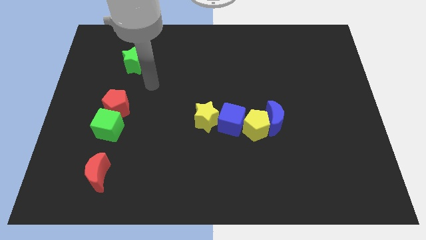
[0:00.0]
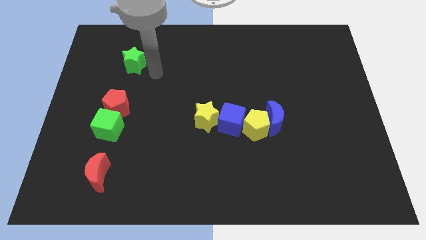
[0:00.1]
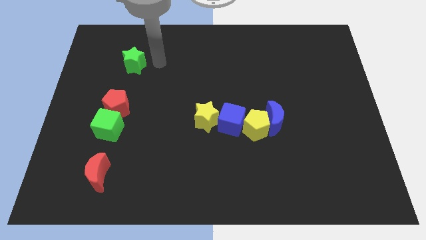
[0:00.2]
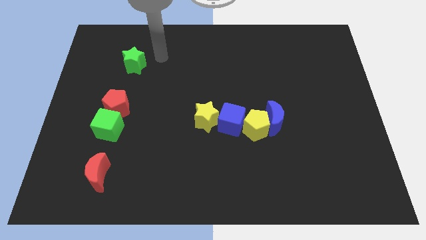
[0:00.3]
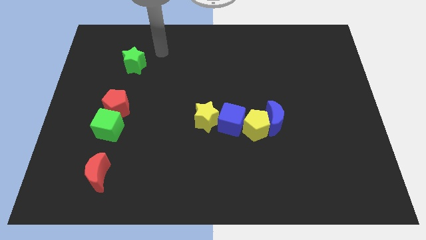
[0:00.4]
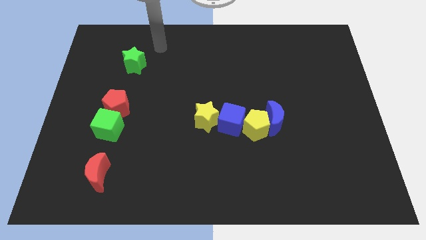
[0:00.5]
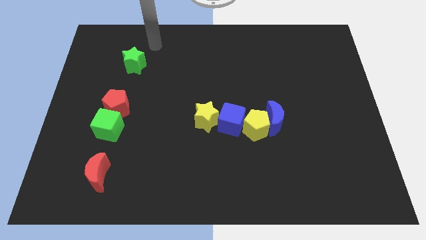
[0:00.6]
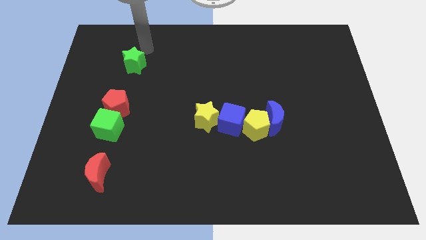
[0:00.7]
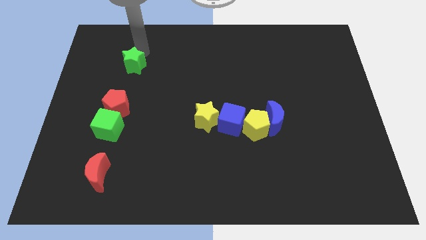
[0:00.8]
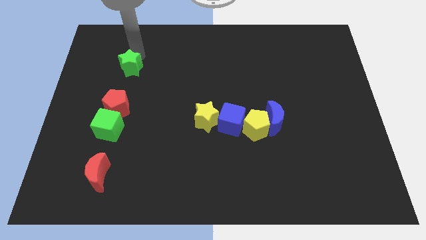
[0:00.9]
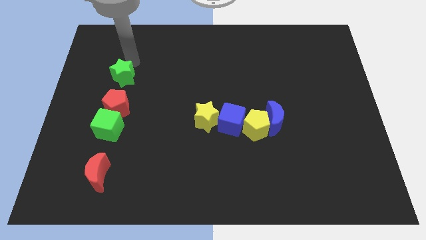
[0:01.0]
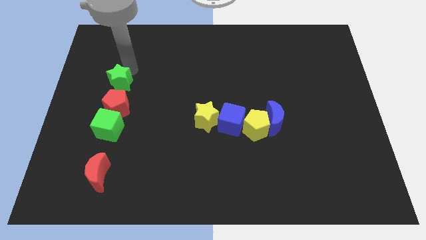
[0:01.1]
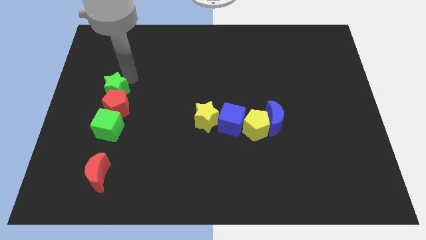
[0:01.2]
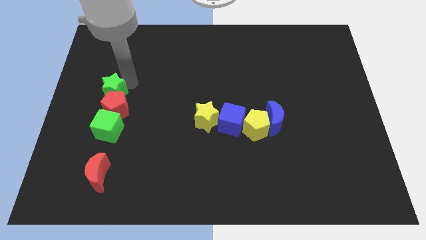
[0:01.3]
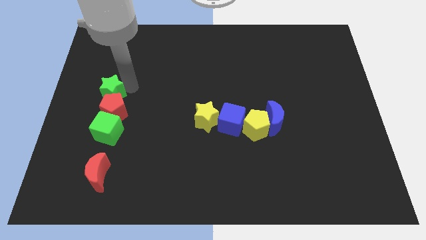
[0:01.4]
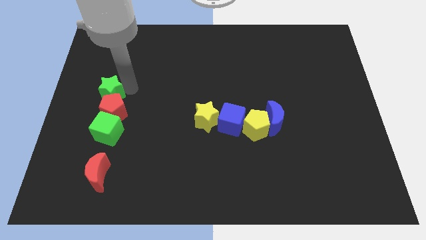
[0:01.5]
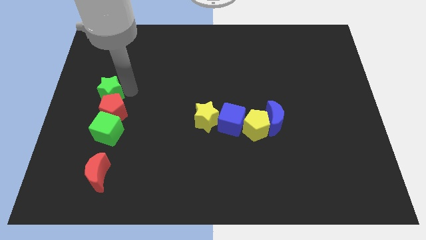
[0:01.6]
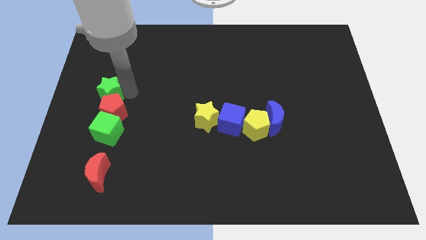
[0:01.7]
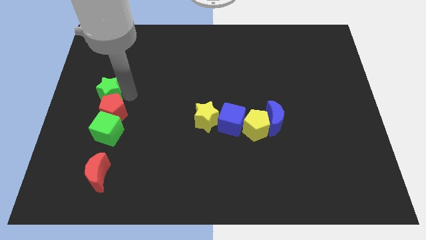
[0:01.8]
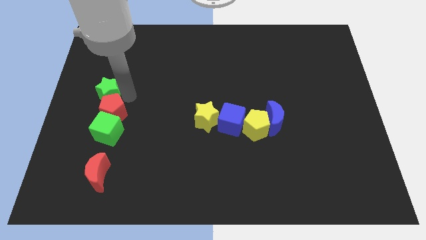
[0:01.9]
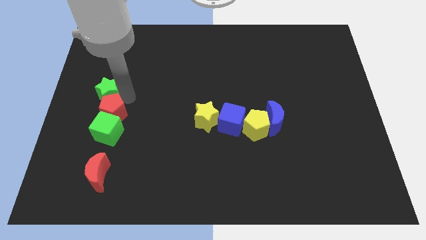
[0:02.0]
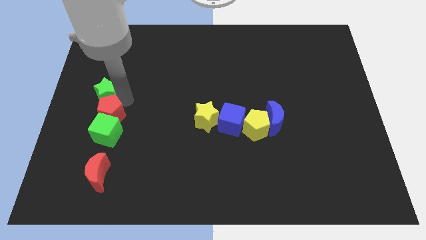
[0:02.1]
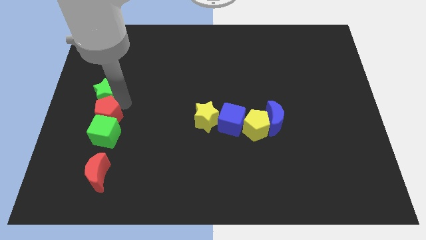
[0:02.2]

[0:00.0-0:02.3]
push the green star into the red pentagon

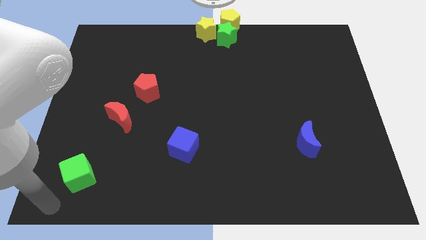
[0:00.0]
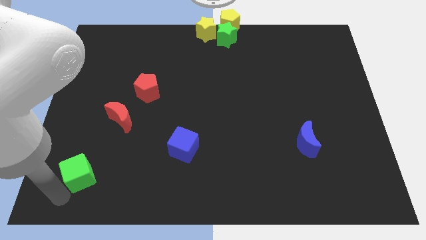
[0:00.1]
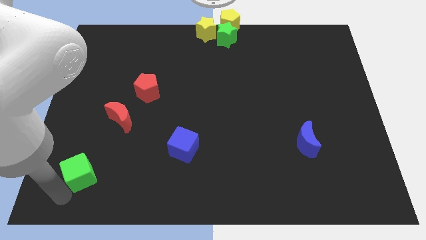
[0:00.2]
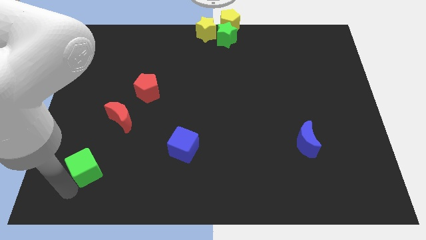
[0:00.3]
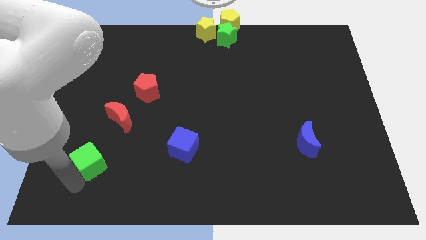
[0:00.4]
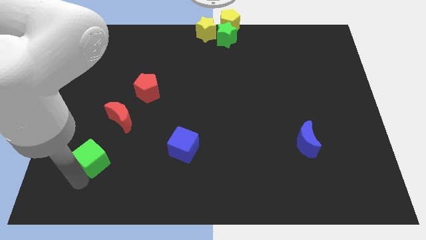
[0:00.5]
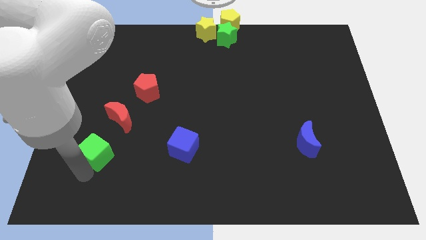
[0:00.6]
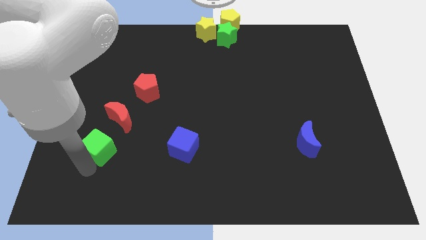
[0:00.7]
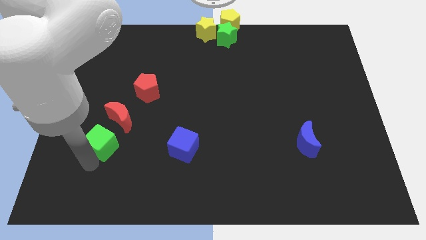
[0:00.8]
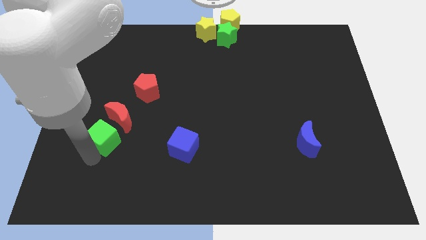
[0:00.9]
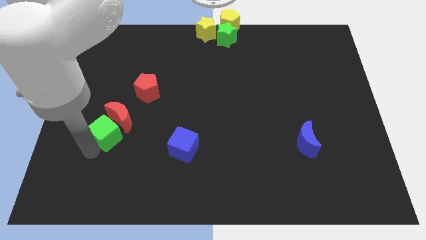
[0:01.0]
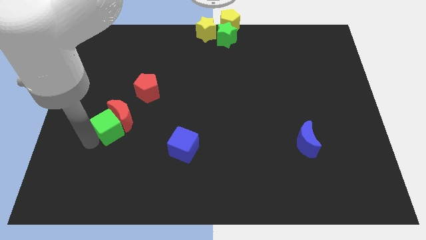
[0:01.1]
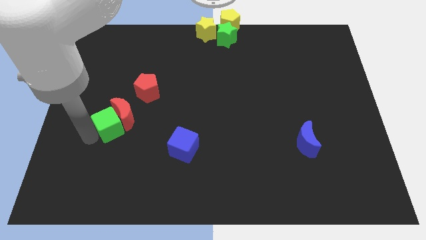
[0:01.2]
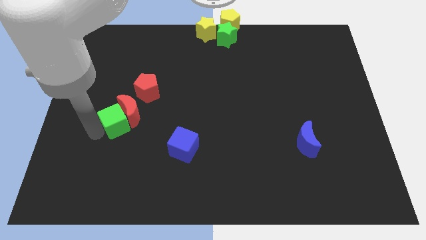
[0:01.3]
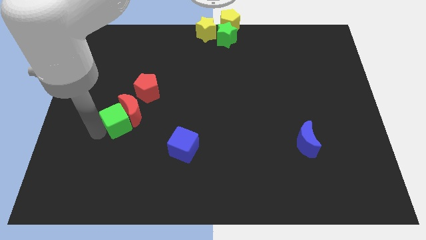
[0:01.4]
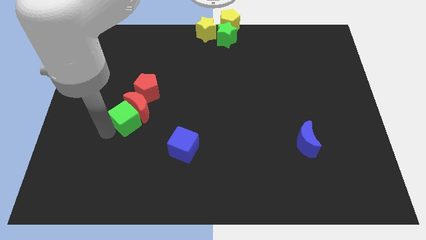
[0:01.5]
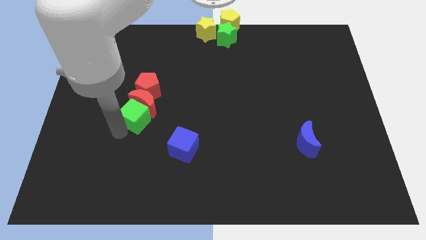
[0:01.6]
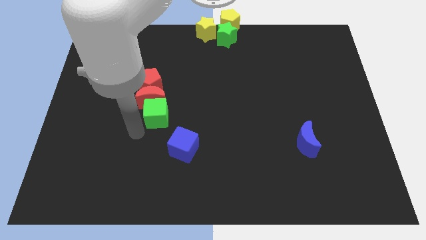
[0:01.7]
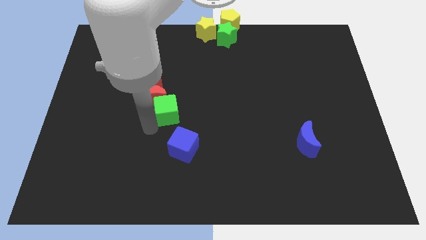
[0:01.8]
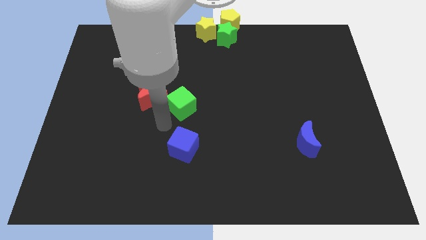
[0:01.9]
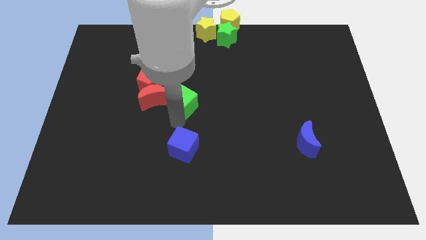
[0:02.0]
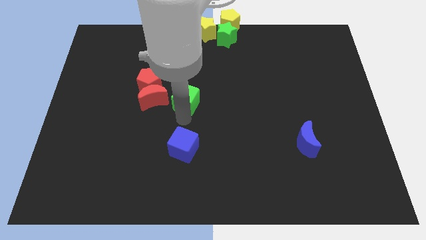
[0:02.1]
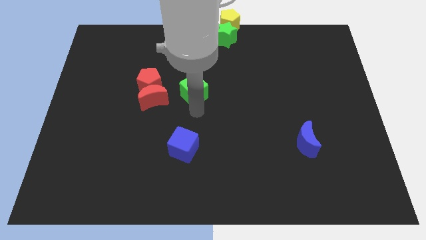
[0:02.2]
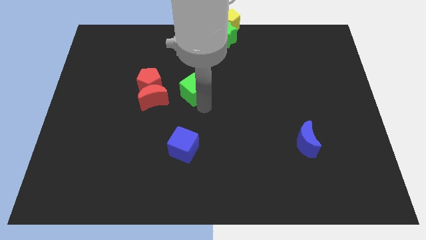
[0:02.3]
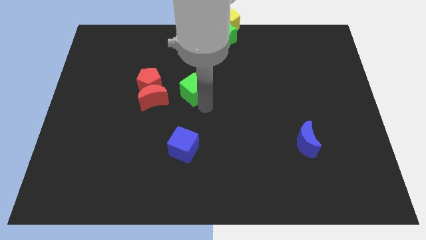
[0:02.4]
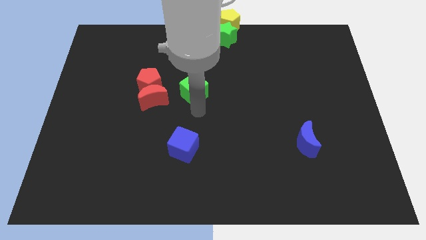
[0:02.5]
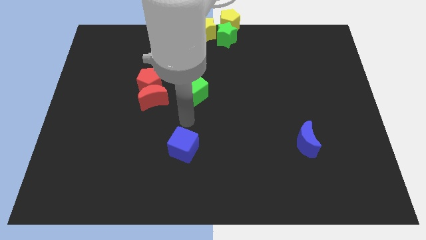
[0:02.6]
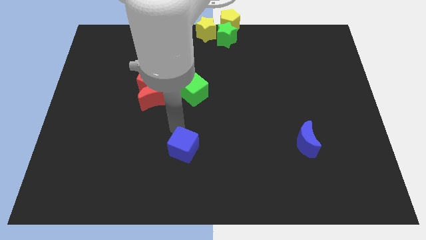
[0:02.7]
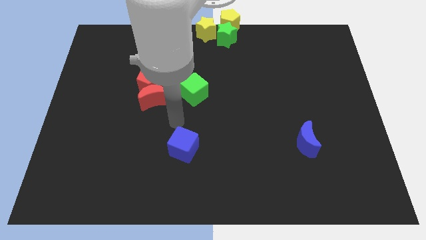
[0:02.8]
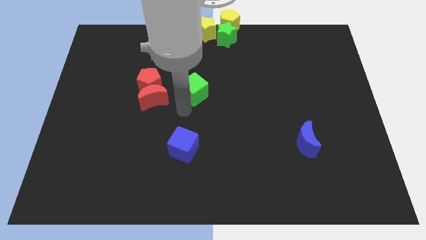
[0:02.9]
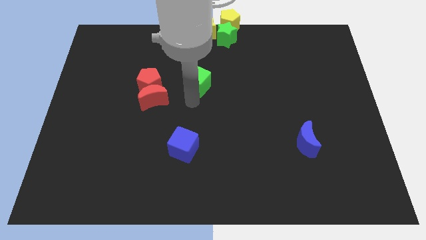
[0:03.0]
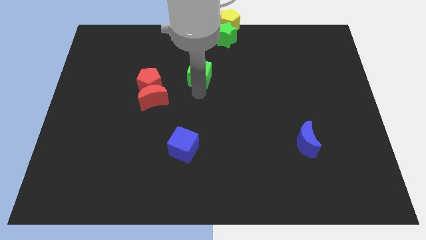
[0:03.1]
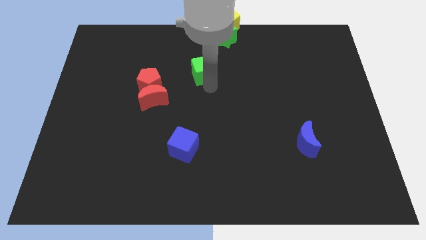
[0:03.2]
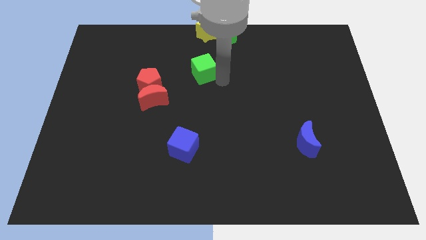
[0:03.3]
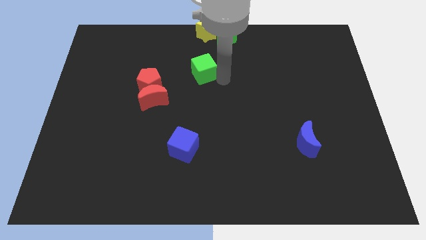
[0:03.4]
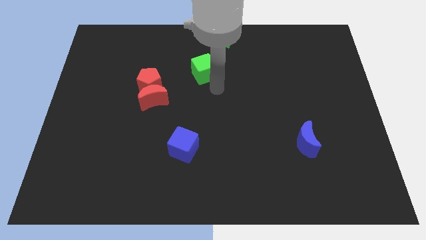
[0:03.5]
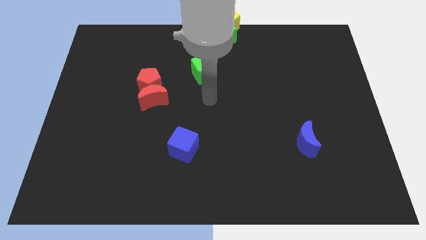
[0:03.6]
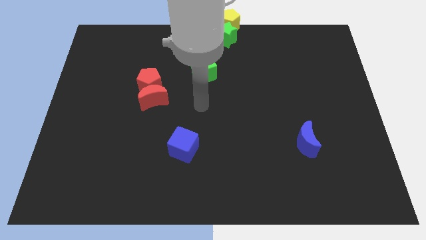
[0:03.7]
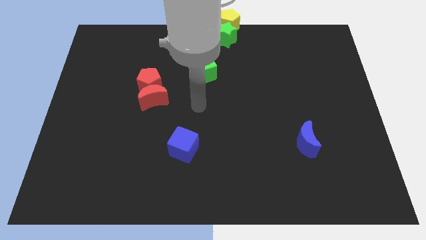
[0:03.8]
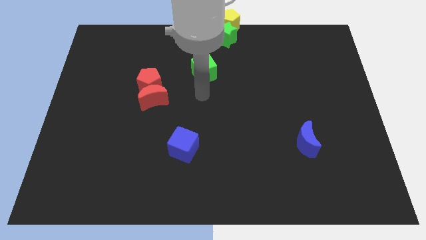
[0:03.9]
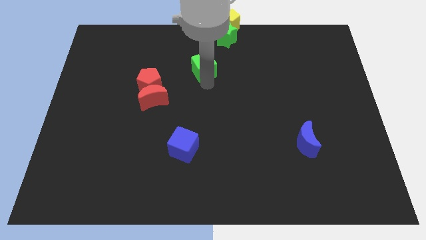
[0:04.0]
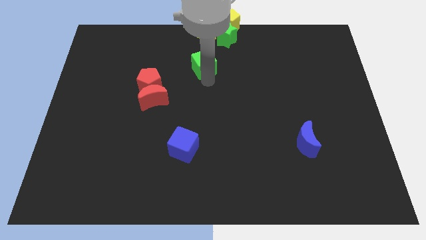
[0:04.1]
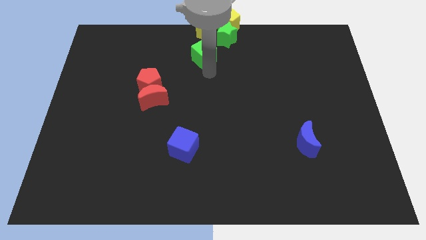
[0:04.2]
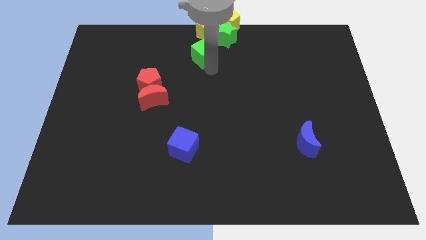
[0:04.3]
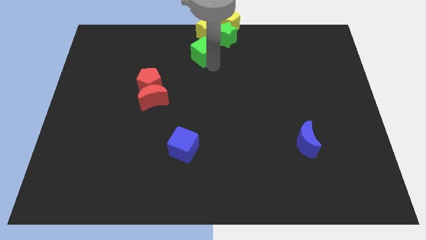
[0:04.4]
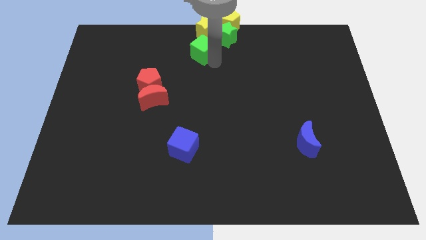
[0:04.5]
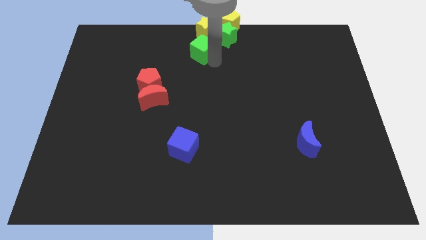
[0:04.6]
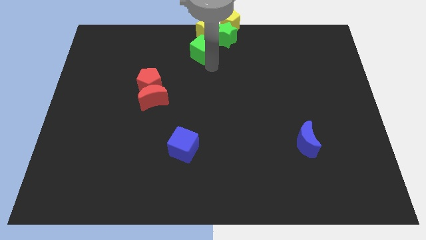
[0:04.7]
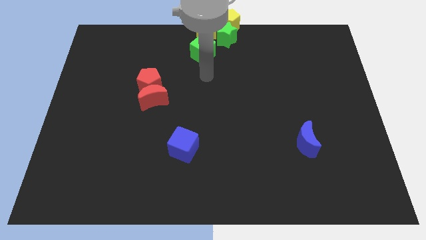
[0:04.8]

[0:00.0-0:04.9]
move the green cube towards the bottom of the yellow star

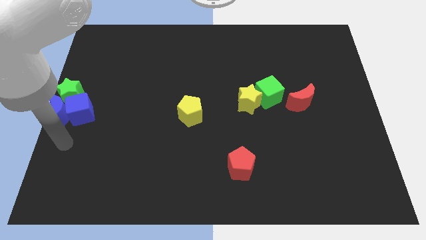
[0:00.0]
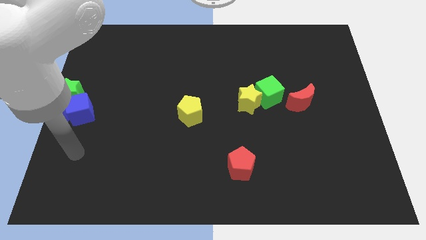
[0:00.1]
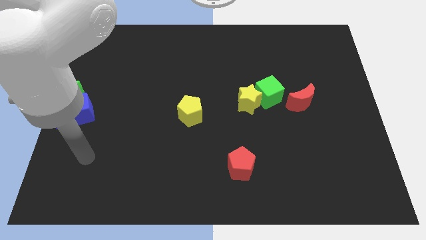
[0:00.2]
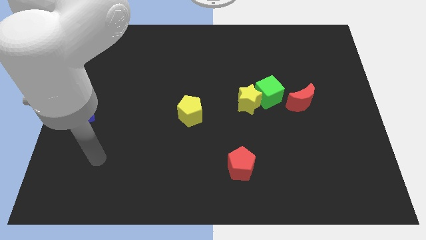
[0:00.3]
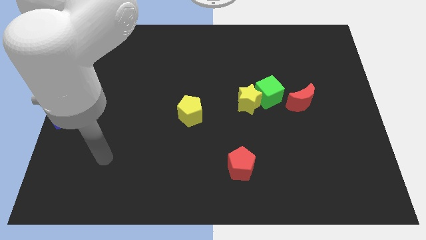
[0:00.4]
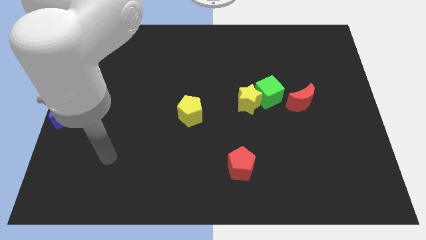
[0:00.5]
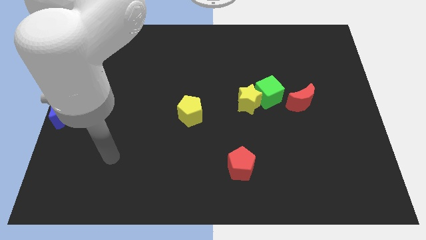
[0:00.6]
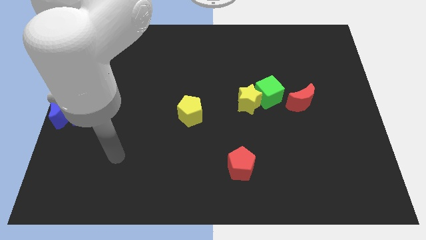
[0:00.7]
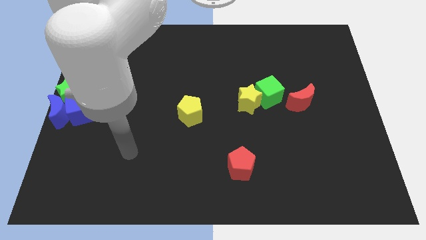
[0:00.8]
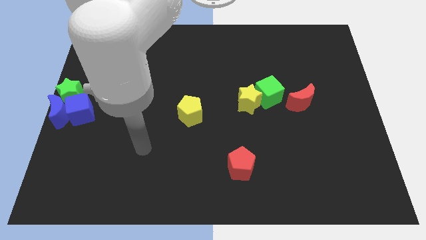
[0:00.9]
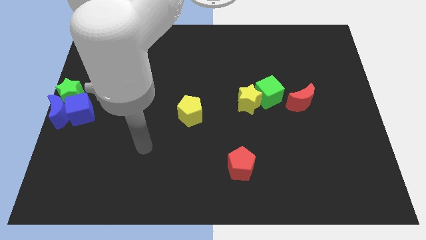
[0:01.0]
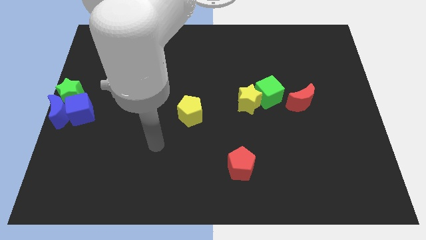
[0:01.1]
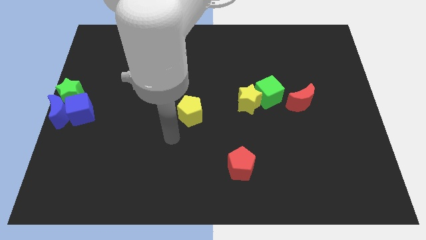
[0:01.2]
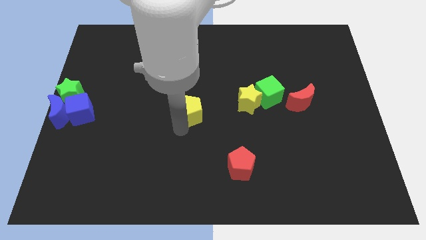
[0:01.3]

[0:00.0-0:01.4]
point the arm at the bottom side of the yellow pentagon

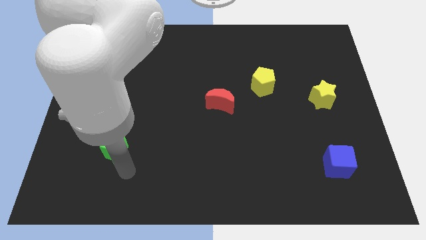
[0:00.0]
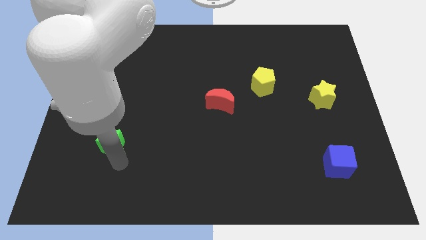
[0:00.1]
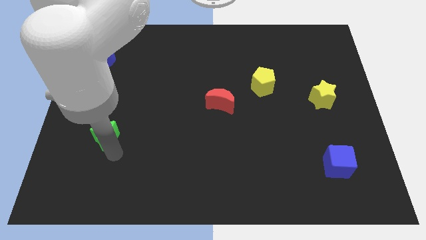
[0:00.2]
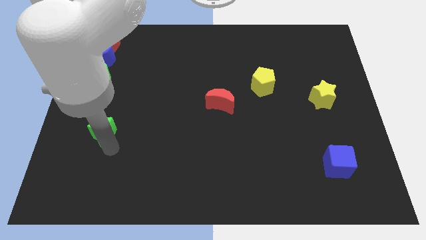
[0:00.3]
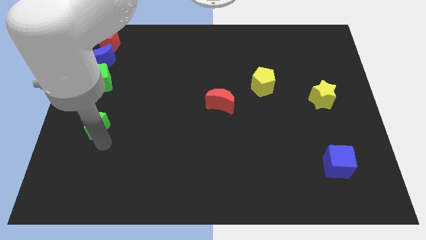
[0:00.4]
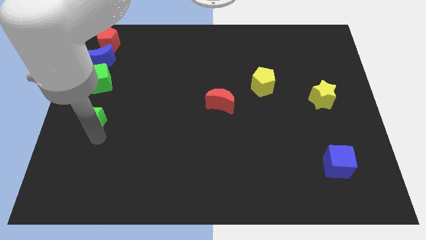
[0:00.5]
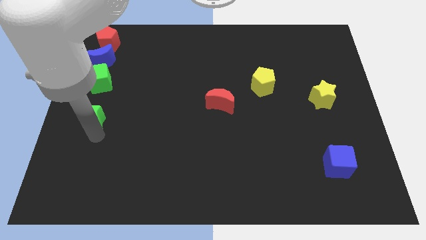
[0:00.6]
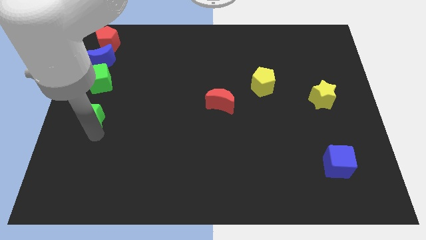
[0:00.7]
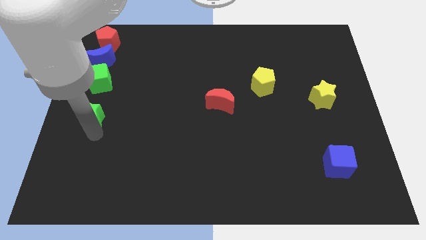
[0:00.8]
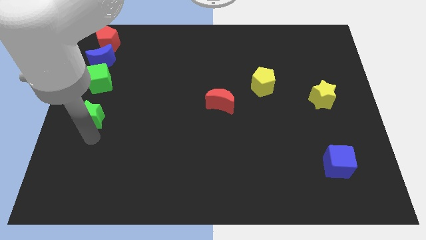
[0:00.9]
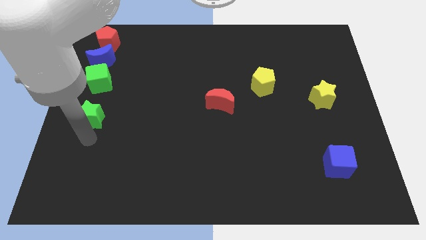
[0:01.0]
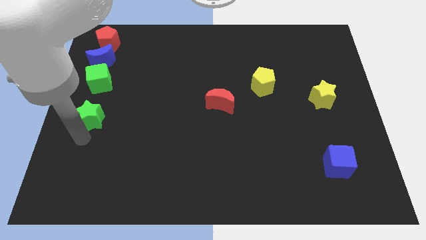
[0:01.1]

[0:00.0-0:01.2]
place the green star at the center left side of the board
